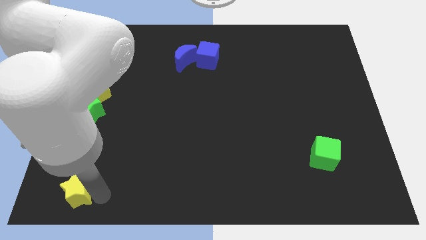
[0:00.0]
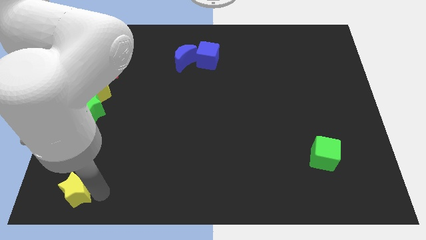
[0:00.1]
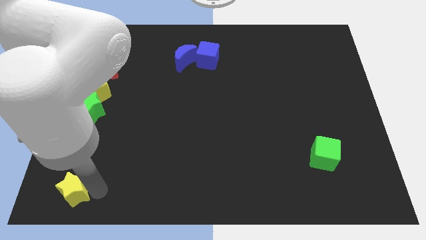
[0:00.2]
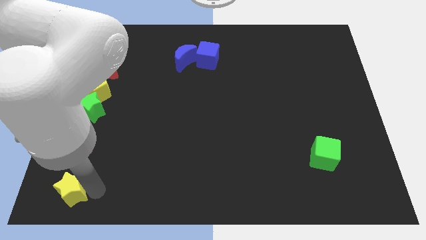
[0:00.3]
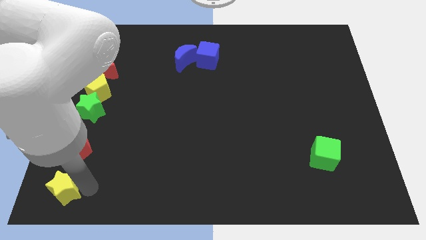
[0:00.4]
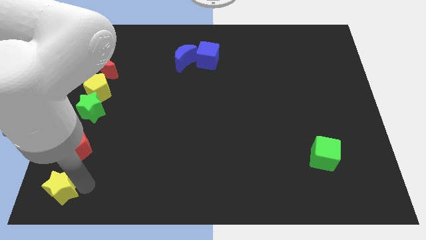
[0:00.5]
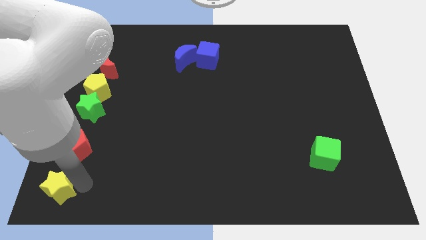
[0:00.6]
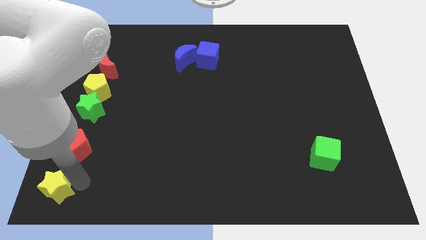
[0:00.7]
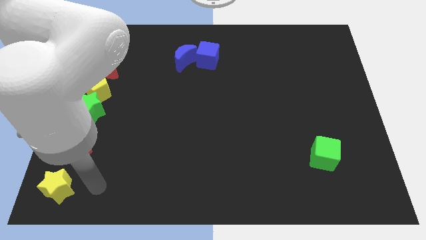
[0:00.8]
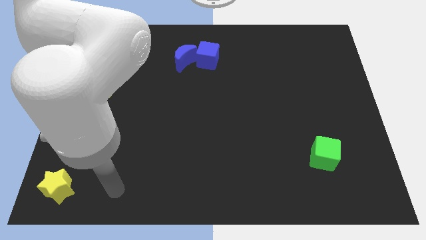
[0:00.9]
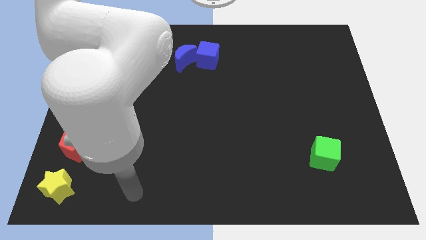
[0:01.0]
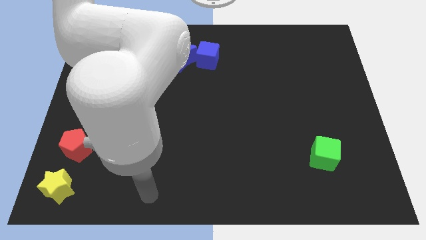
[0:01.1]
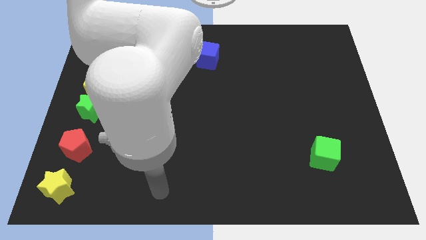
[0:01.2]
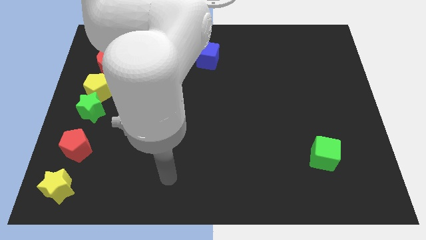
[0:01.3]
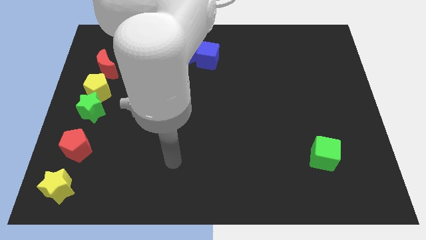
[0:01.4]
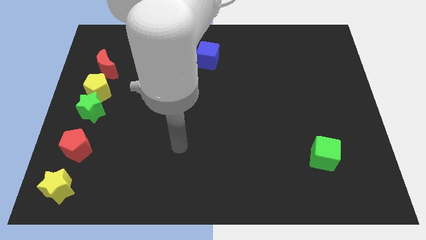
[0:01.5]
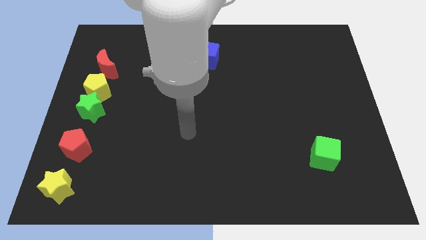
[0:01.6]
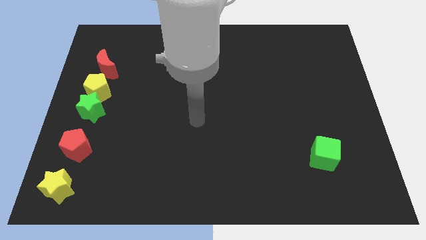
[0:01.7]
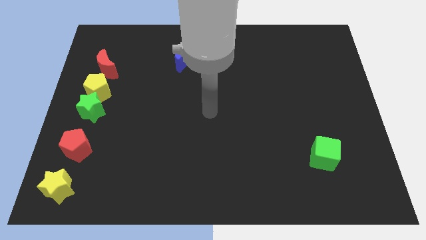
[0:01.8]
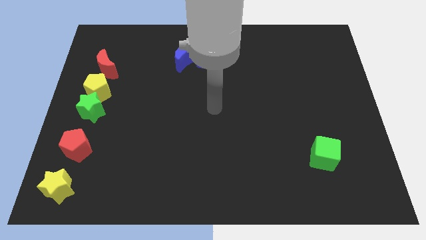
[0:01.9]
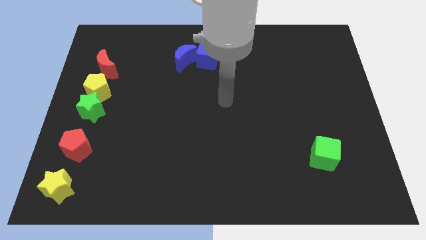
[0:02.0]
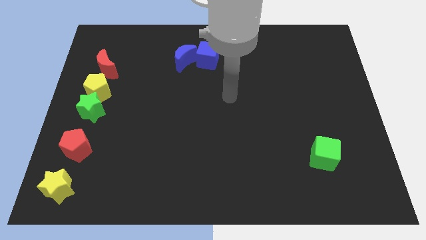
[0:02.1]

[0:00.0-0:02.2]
move the yellow star slightly to the left

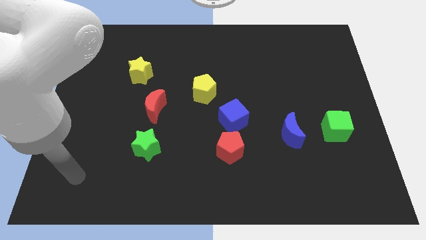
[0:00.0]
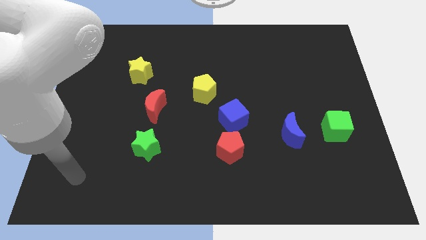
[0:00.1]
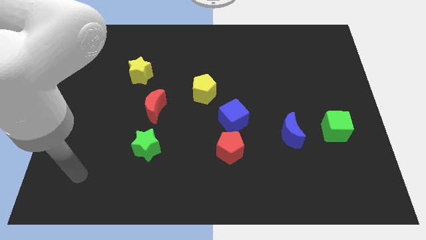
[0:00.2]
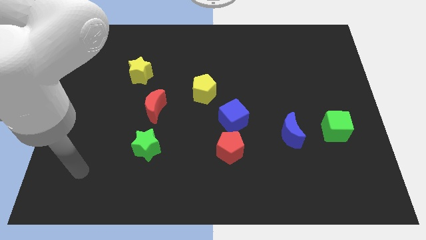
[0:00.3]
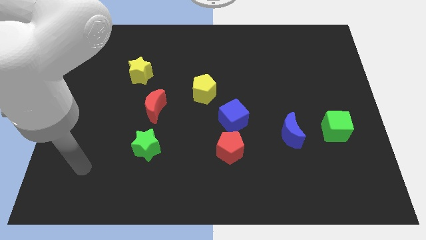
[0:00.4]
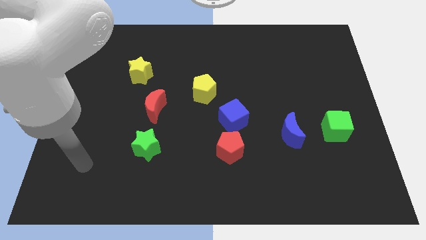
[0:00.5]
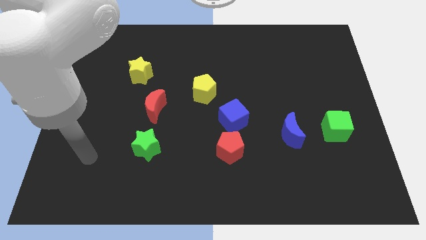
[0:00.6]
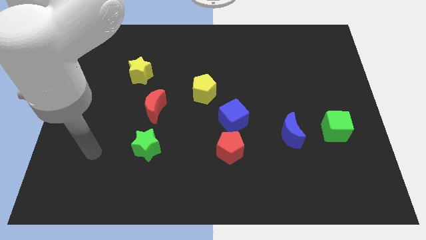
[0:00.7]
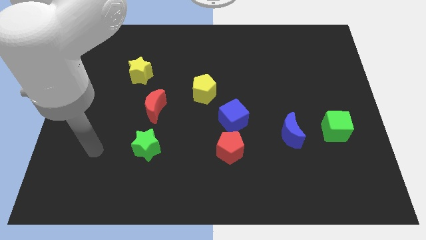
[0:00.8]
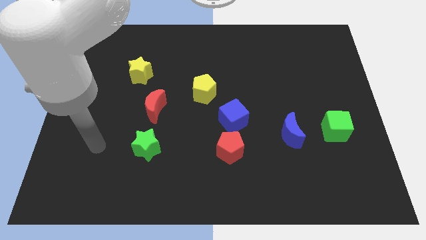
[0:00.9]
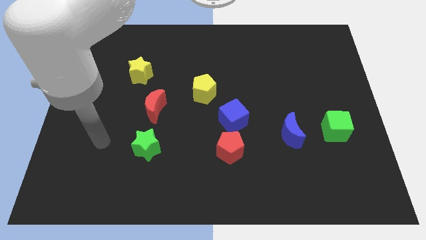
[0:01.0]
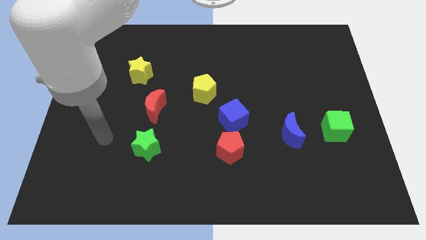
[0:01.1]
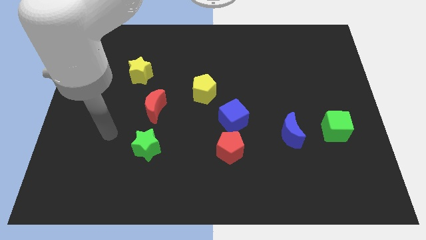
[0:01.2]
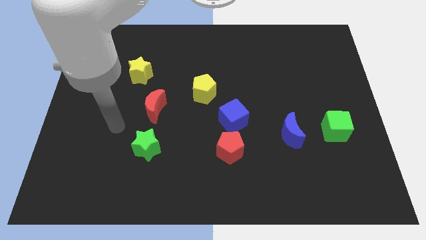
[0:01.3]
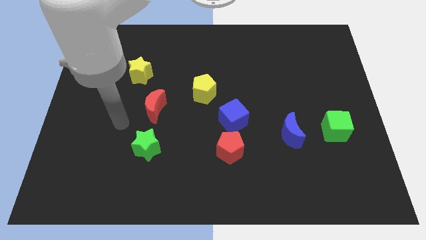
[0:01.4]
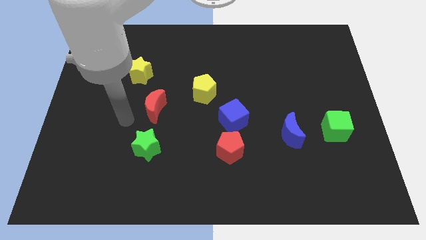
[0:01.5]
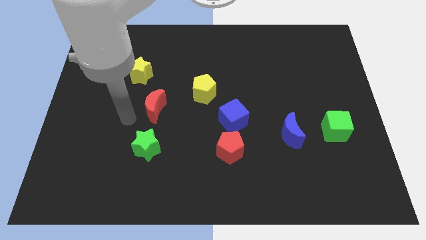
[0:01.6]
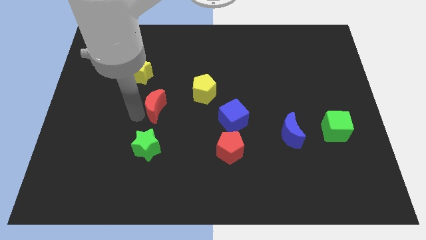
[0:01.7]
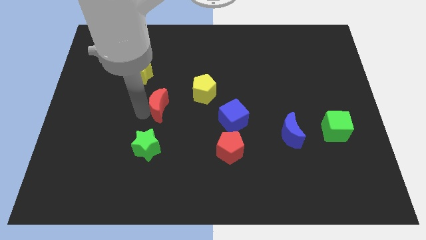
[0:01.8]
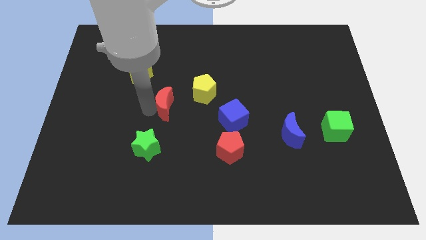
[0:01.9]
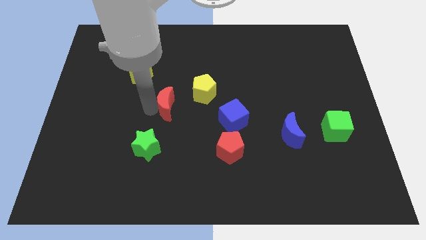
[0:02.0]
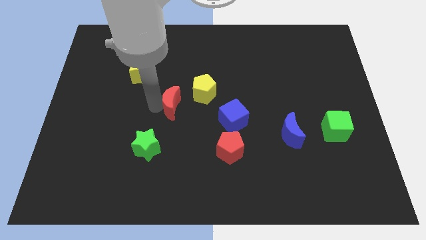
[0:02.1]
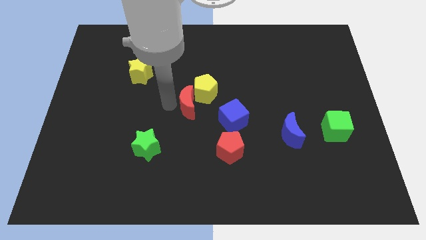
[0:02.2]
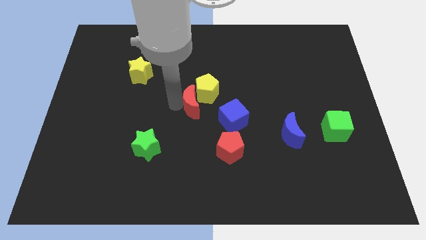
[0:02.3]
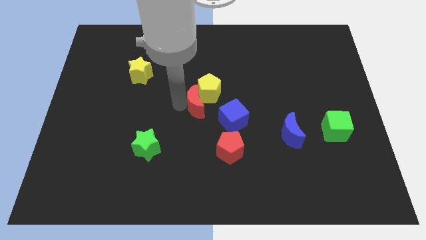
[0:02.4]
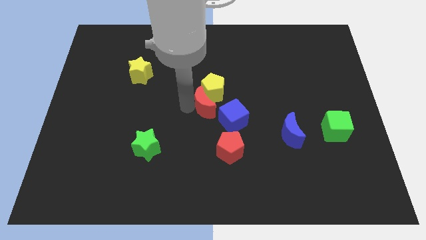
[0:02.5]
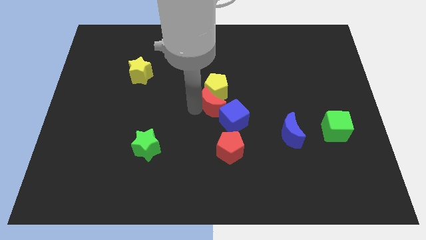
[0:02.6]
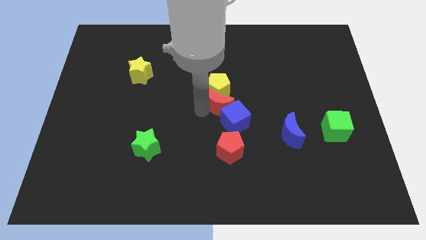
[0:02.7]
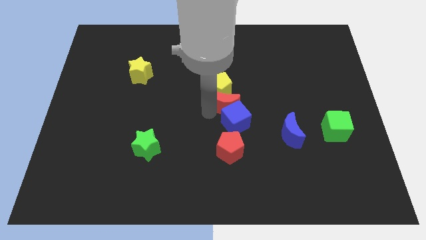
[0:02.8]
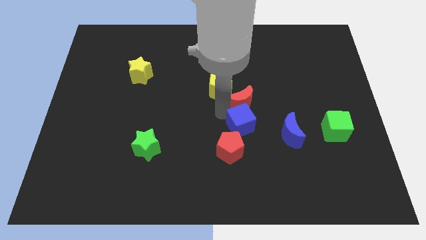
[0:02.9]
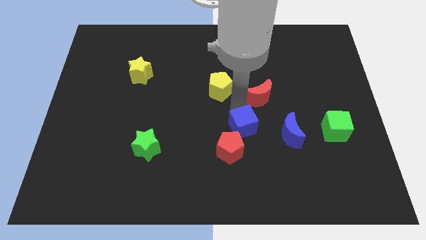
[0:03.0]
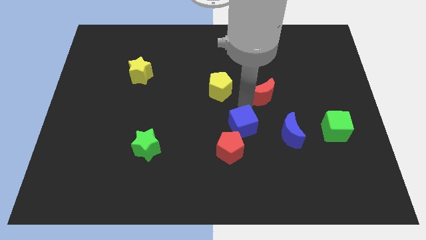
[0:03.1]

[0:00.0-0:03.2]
move the red moon diagonal to the blue cube

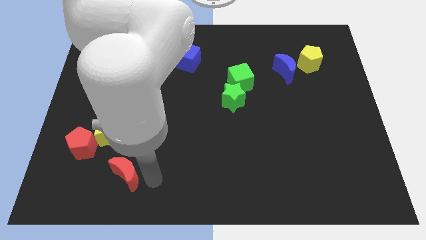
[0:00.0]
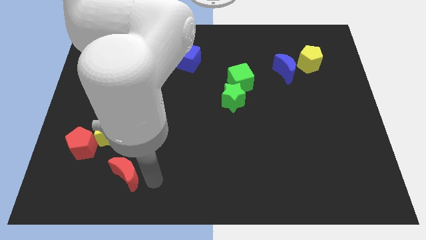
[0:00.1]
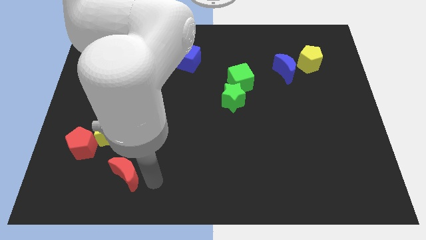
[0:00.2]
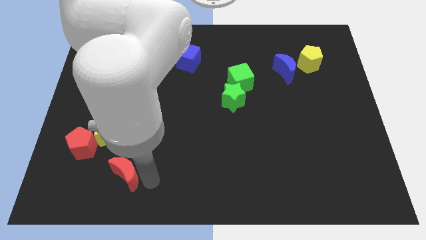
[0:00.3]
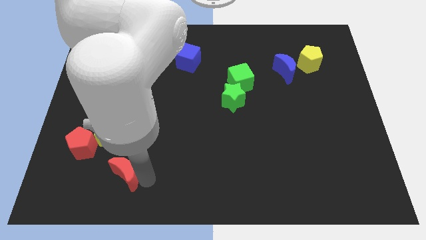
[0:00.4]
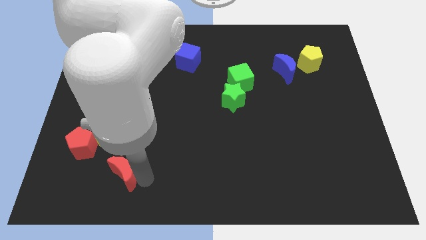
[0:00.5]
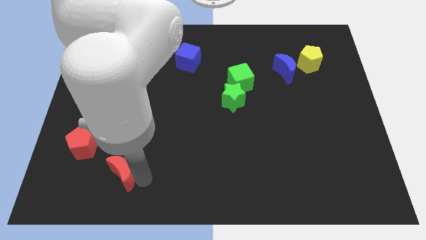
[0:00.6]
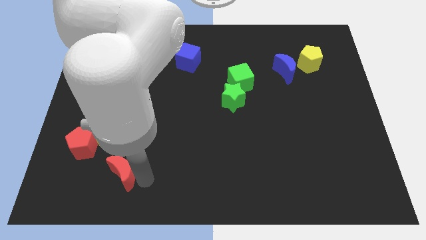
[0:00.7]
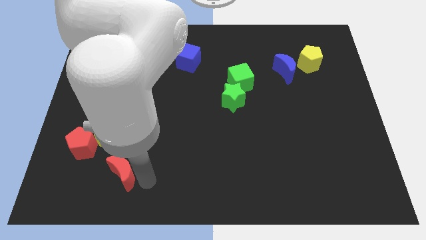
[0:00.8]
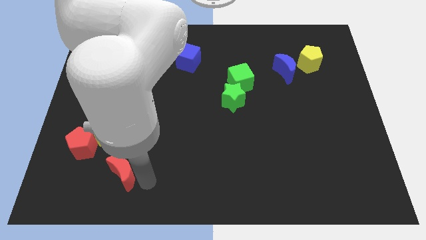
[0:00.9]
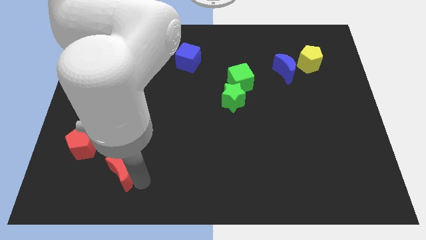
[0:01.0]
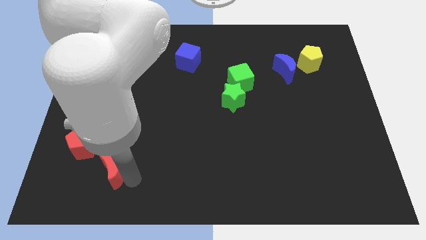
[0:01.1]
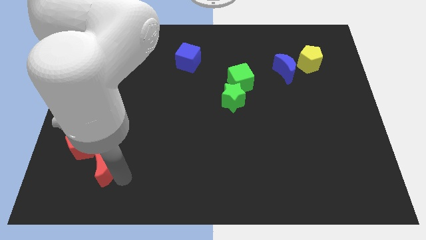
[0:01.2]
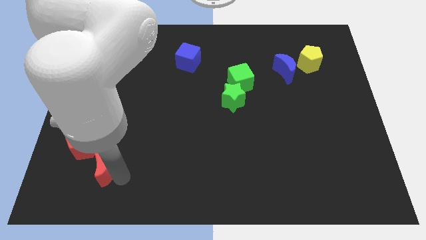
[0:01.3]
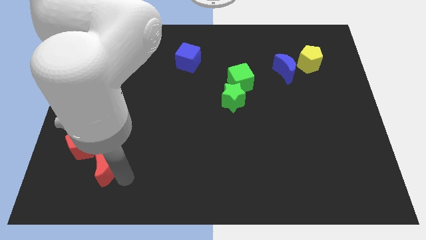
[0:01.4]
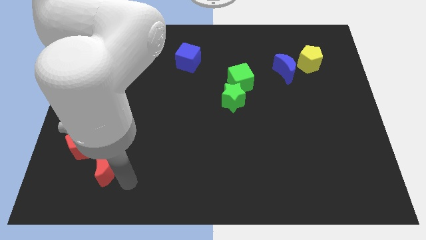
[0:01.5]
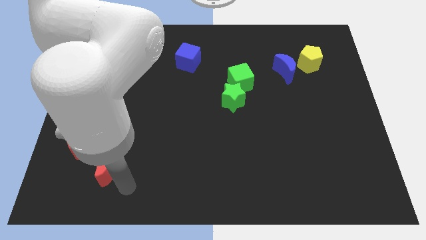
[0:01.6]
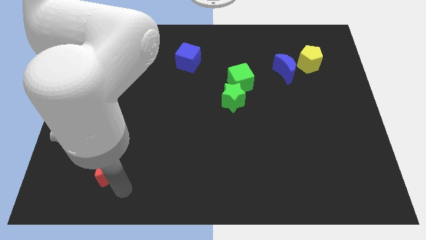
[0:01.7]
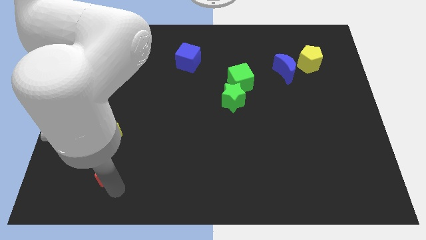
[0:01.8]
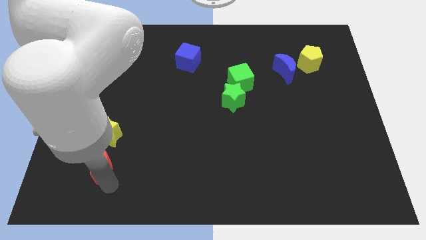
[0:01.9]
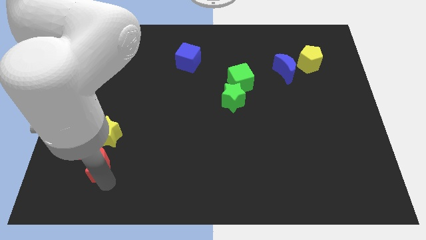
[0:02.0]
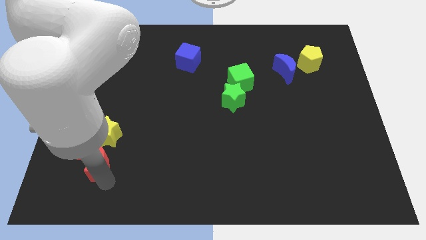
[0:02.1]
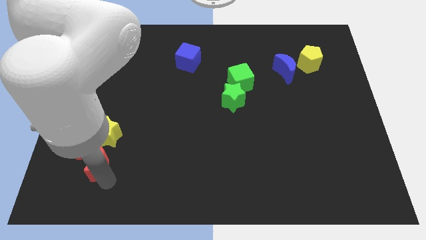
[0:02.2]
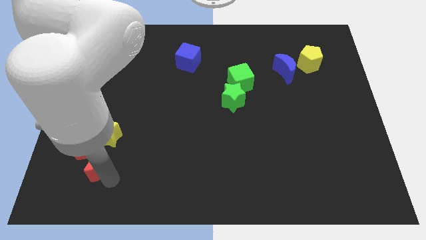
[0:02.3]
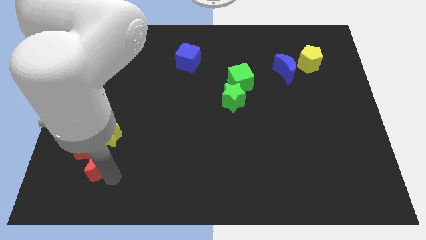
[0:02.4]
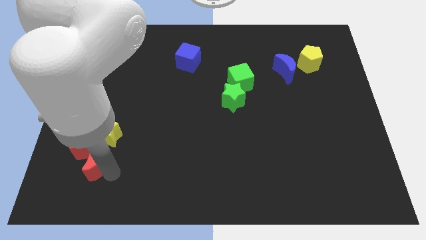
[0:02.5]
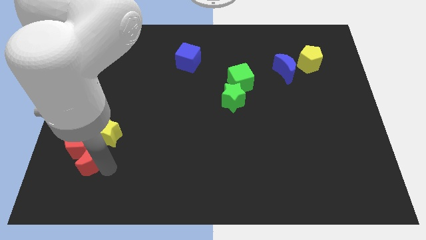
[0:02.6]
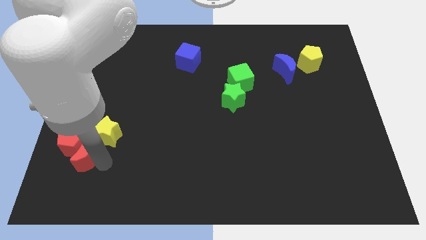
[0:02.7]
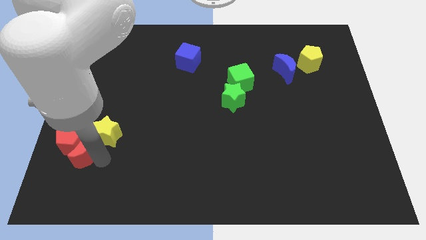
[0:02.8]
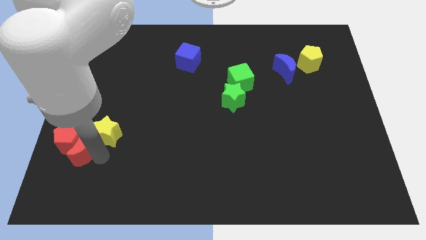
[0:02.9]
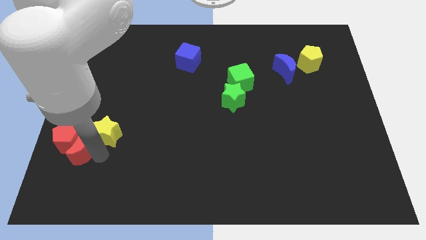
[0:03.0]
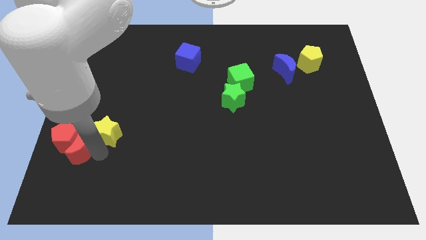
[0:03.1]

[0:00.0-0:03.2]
push red moon into red pentagon

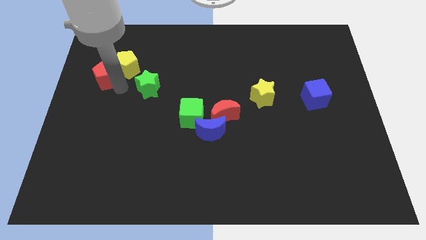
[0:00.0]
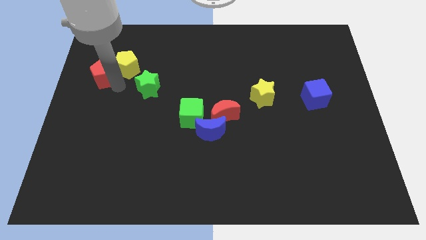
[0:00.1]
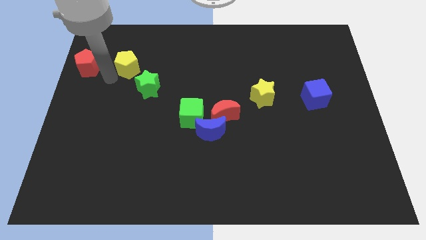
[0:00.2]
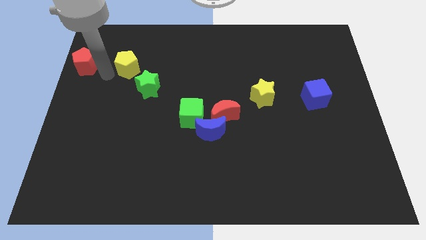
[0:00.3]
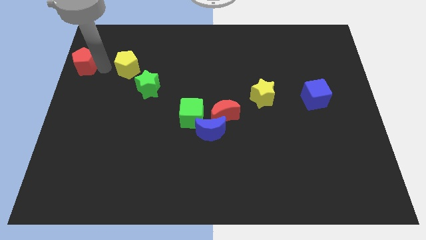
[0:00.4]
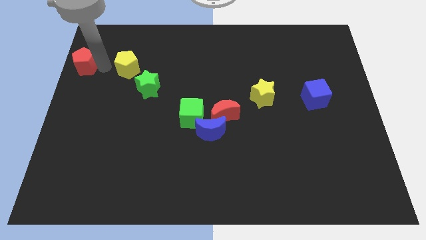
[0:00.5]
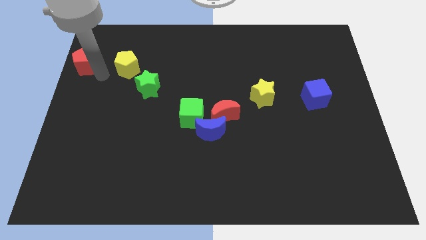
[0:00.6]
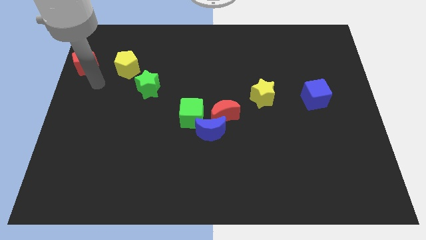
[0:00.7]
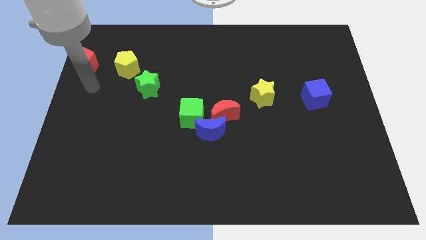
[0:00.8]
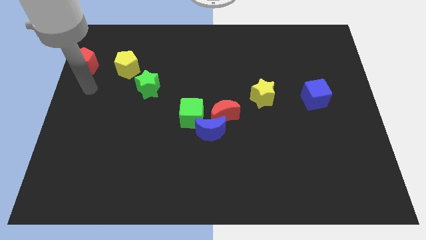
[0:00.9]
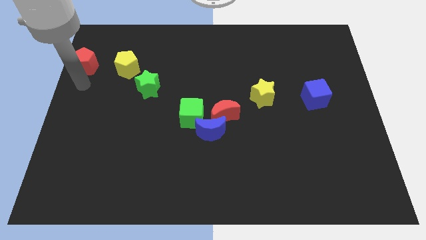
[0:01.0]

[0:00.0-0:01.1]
separate red pentagon and yellow pentagon
